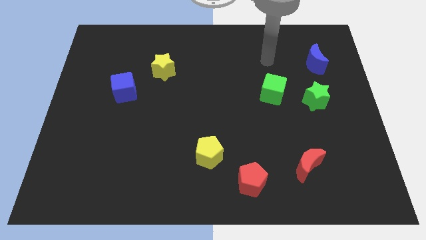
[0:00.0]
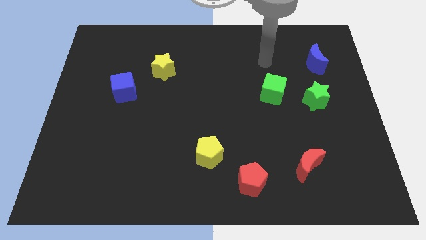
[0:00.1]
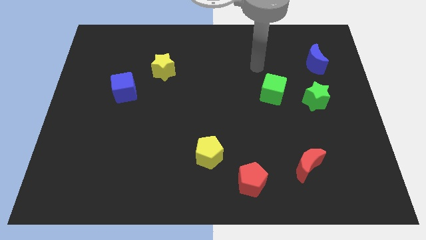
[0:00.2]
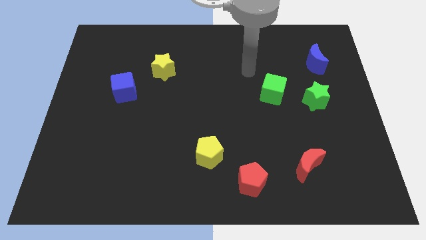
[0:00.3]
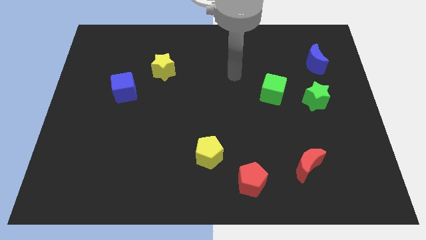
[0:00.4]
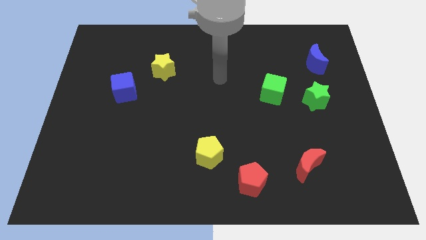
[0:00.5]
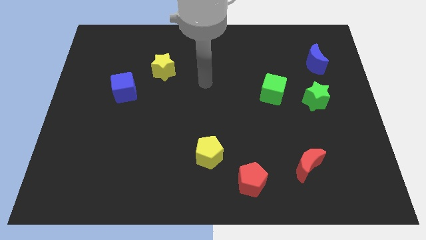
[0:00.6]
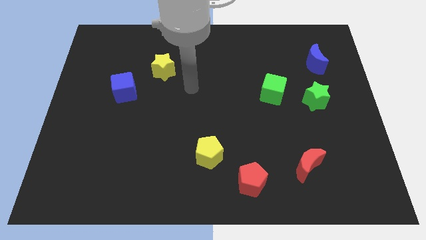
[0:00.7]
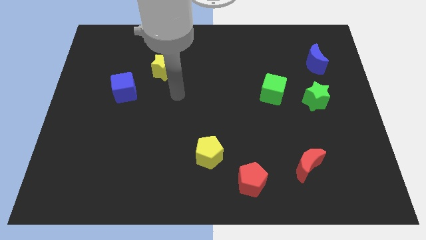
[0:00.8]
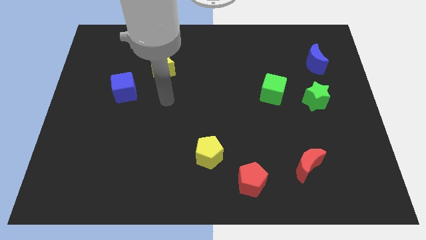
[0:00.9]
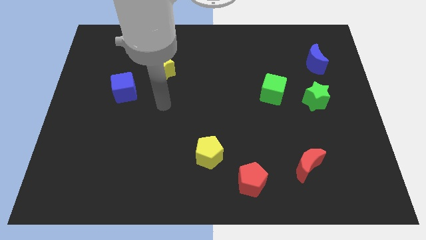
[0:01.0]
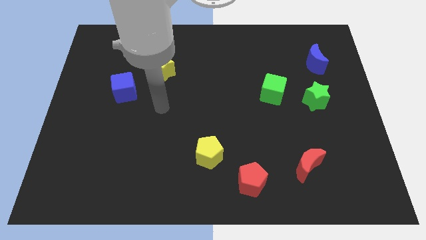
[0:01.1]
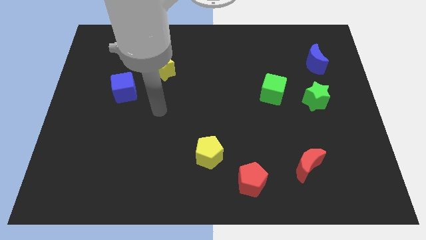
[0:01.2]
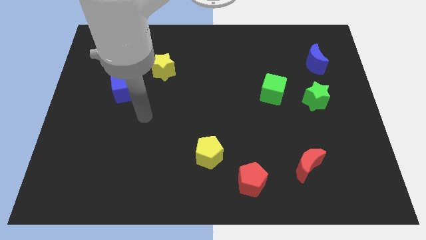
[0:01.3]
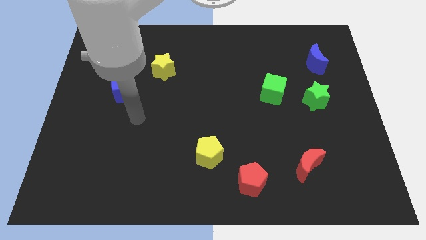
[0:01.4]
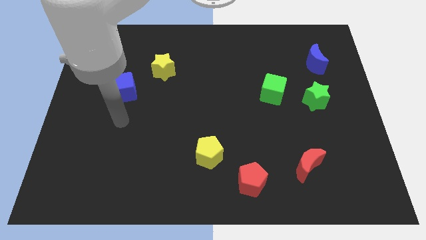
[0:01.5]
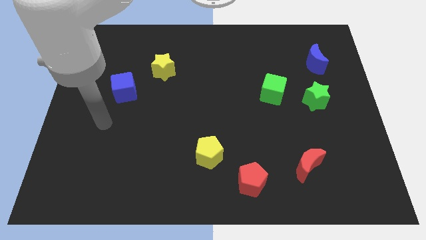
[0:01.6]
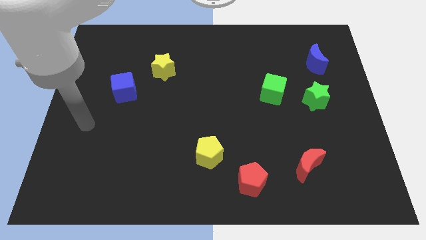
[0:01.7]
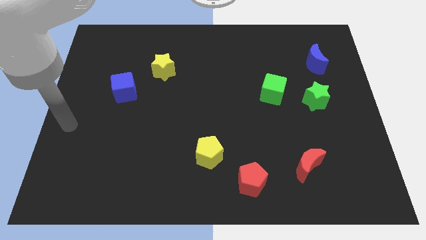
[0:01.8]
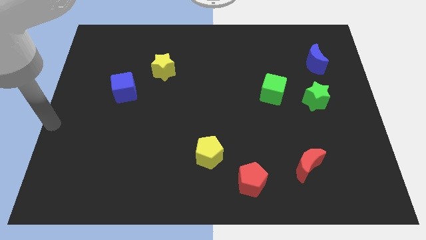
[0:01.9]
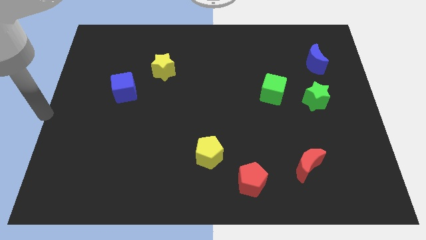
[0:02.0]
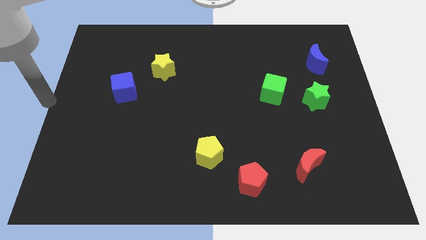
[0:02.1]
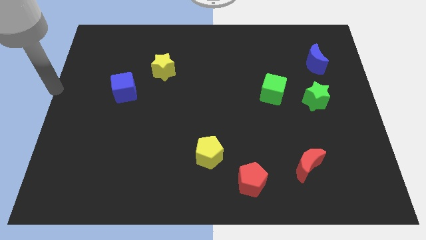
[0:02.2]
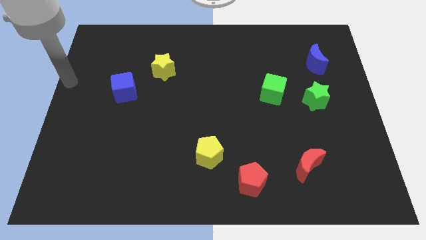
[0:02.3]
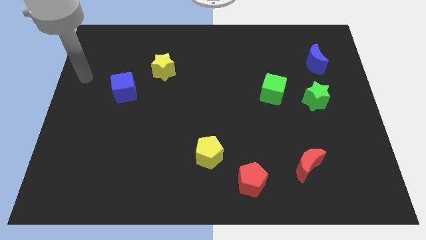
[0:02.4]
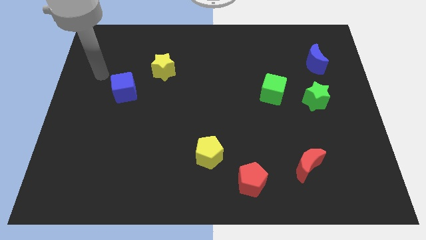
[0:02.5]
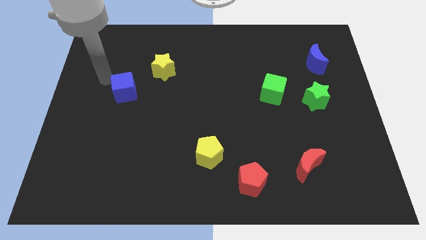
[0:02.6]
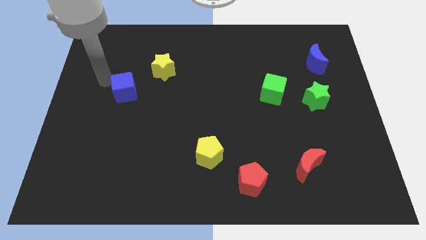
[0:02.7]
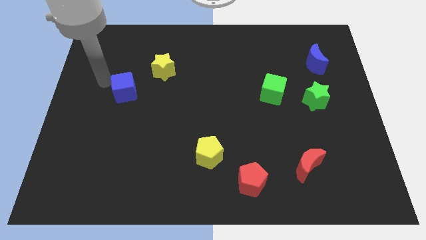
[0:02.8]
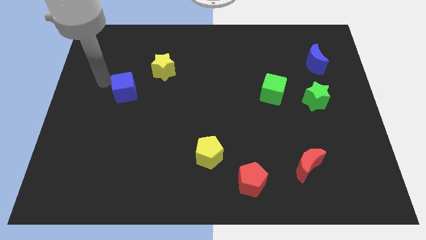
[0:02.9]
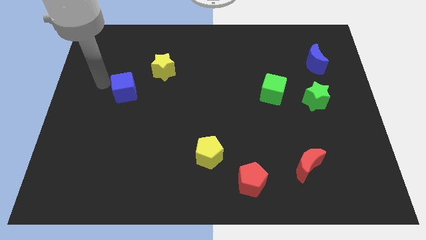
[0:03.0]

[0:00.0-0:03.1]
move your arm to the left of blue cube

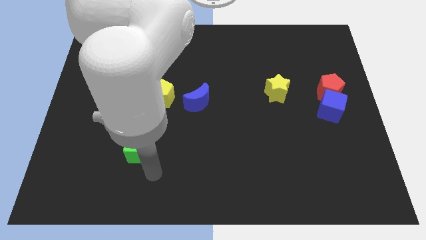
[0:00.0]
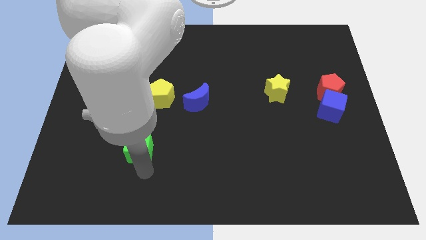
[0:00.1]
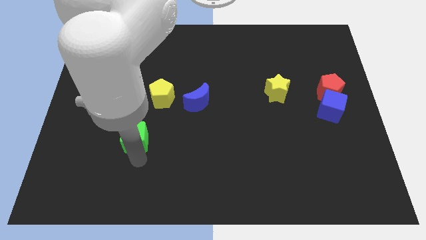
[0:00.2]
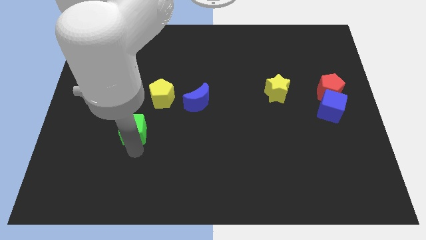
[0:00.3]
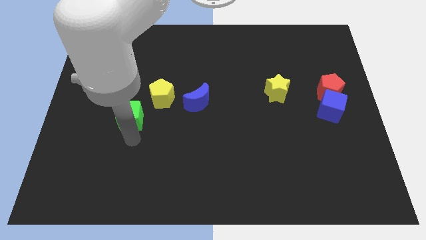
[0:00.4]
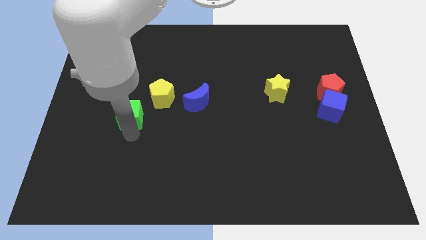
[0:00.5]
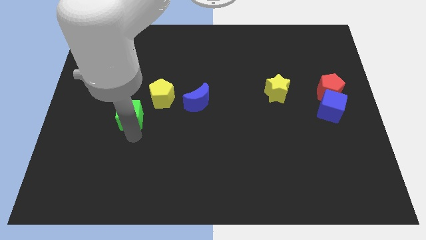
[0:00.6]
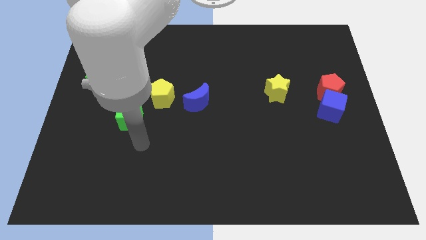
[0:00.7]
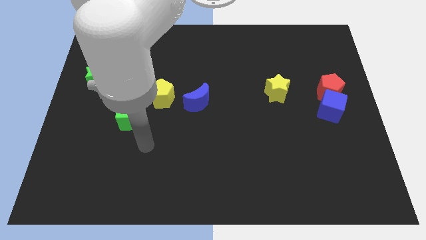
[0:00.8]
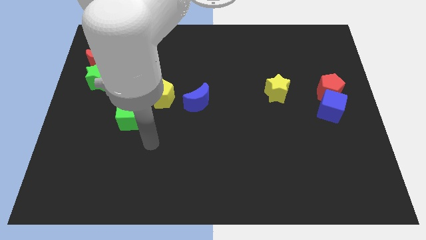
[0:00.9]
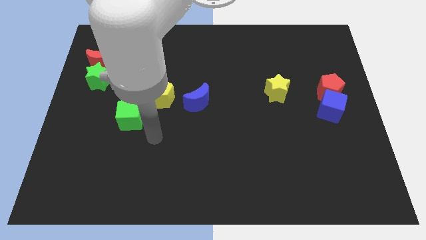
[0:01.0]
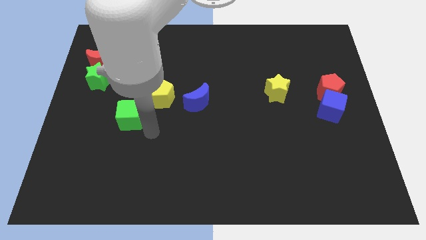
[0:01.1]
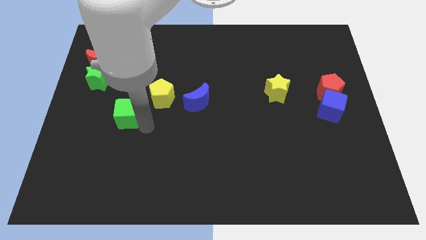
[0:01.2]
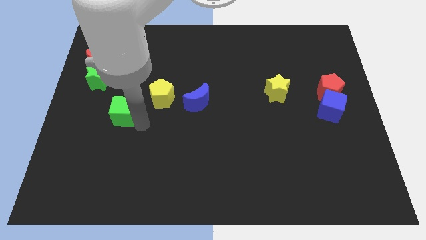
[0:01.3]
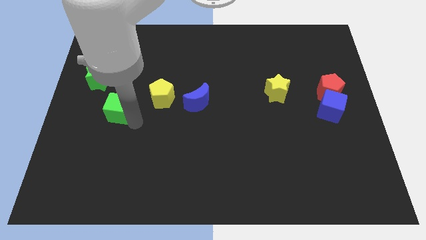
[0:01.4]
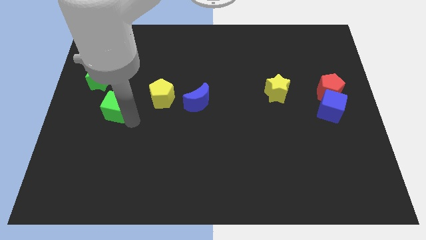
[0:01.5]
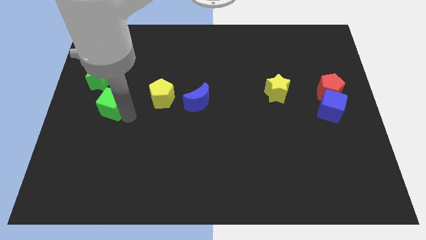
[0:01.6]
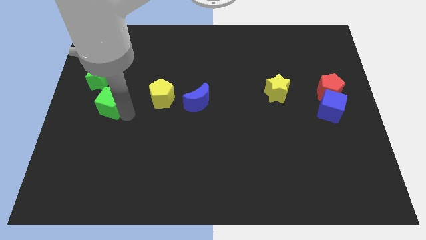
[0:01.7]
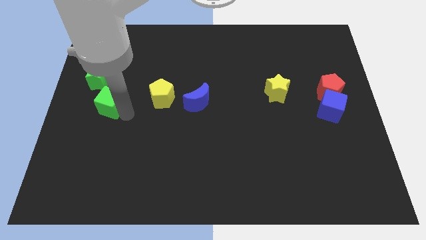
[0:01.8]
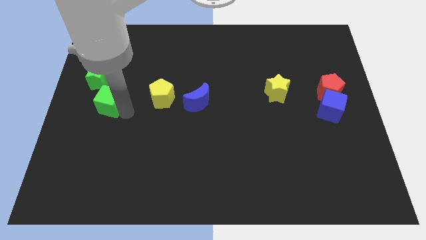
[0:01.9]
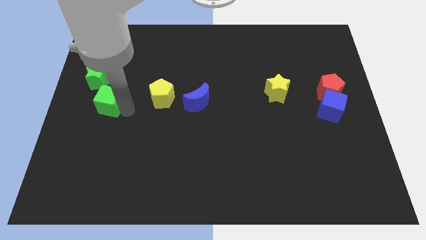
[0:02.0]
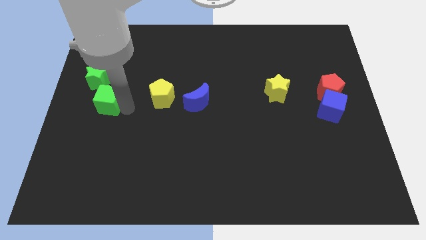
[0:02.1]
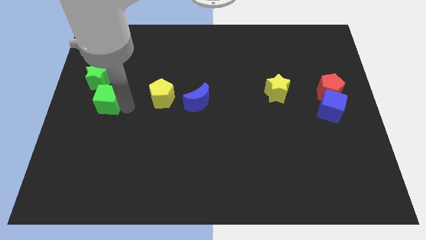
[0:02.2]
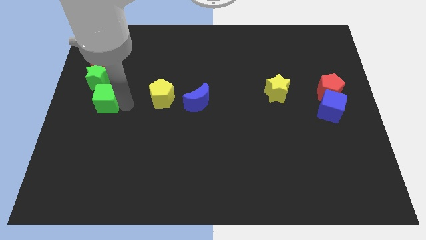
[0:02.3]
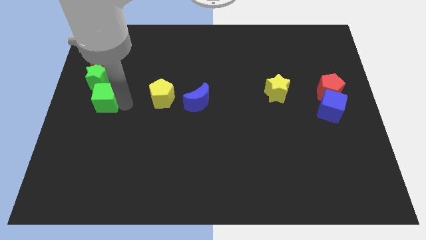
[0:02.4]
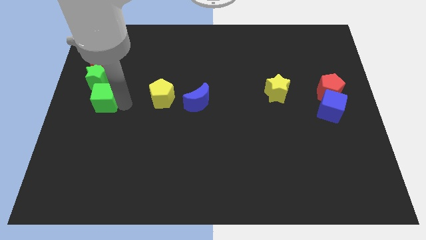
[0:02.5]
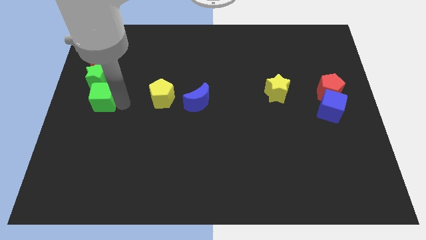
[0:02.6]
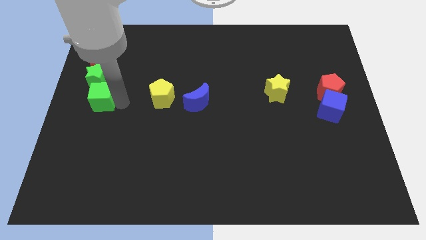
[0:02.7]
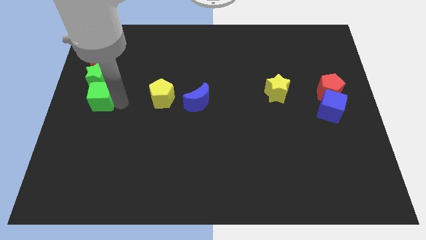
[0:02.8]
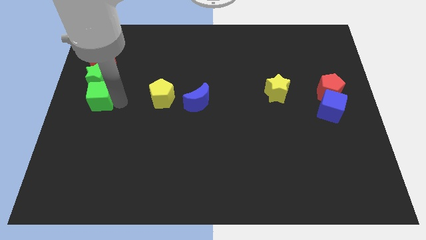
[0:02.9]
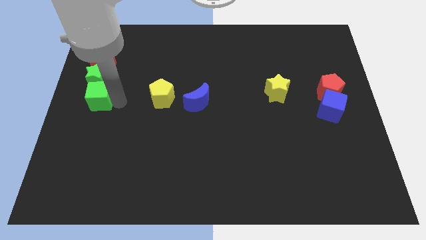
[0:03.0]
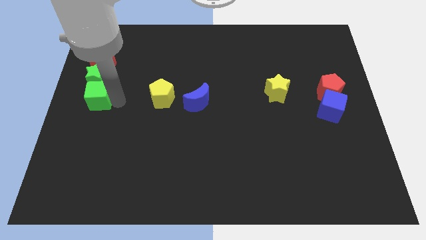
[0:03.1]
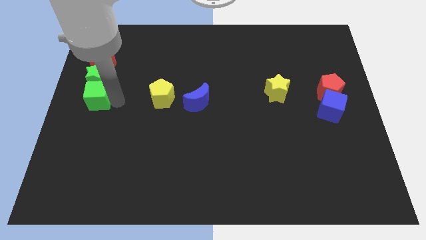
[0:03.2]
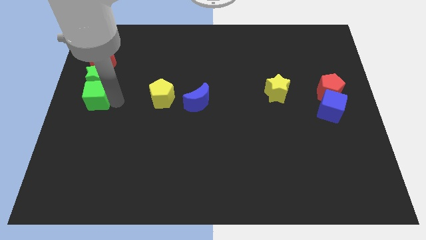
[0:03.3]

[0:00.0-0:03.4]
place green cube below green star

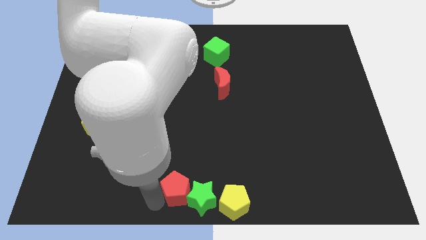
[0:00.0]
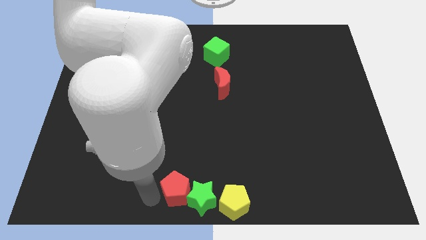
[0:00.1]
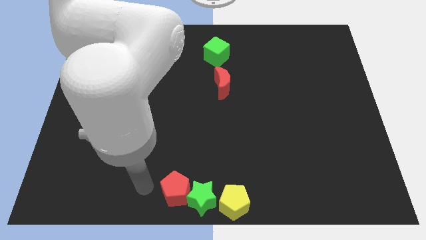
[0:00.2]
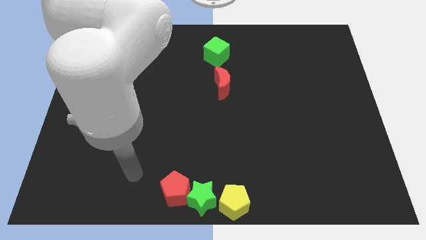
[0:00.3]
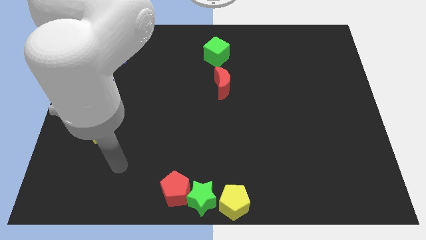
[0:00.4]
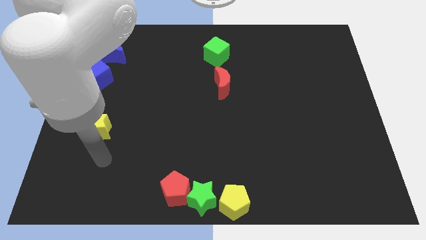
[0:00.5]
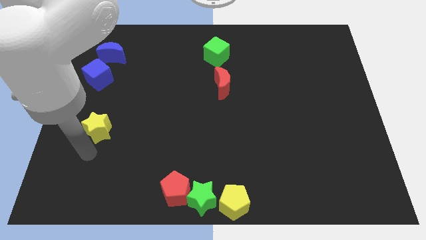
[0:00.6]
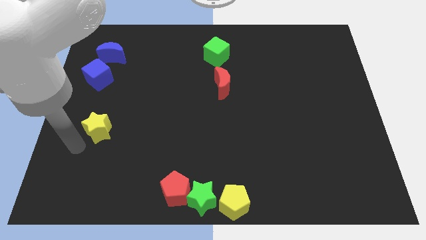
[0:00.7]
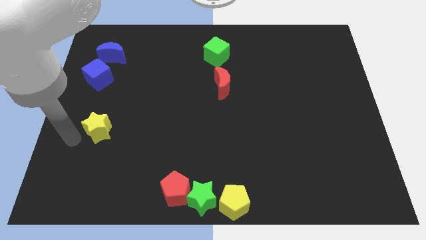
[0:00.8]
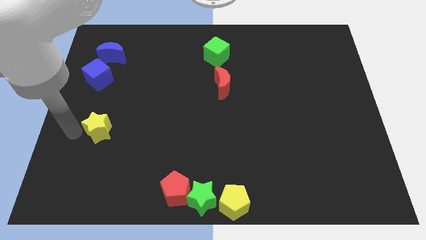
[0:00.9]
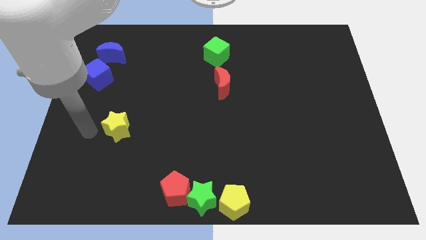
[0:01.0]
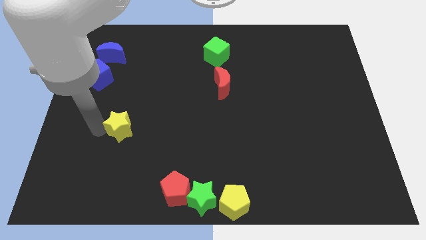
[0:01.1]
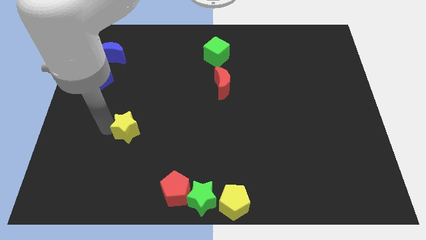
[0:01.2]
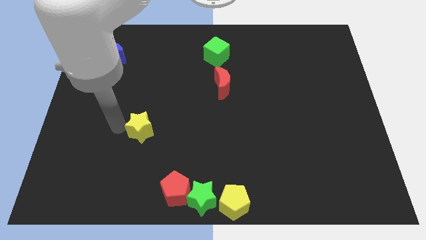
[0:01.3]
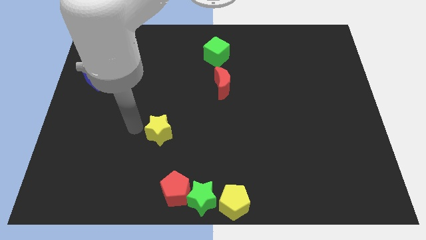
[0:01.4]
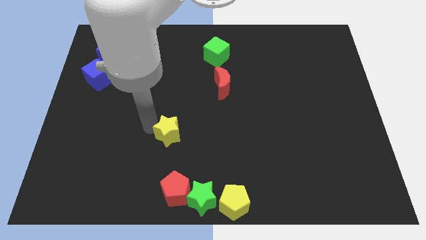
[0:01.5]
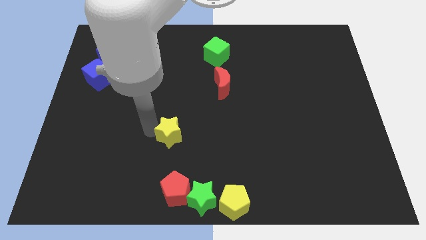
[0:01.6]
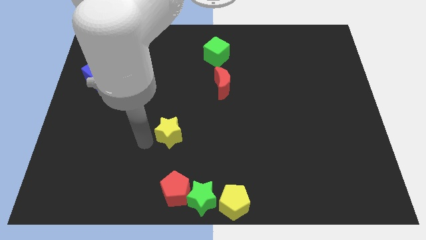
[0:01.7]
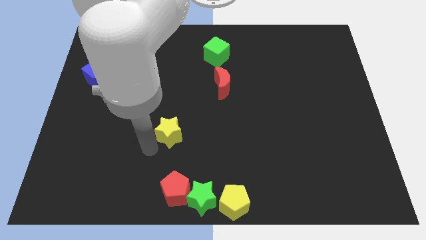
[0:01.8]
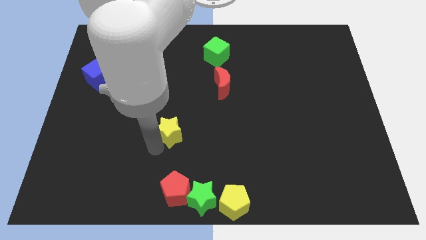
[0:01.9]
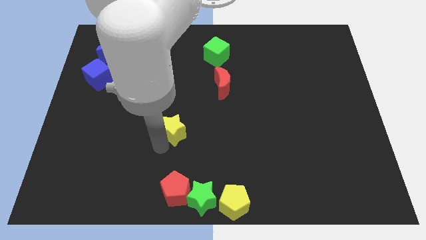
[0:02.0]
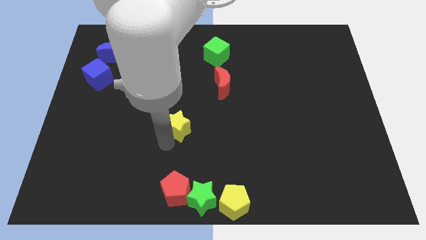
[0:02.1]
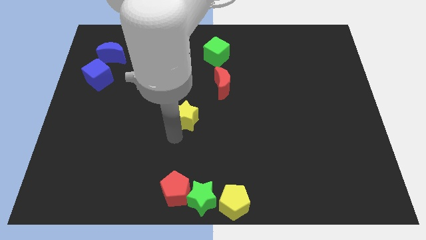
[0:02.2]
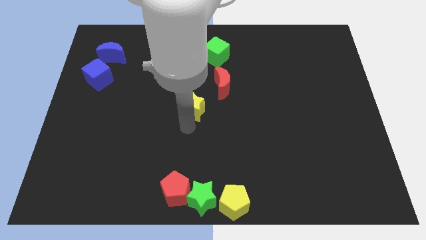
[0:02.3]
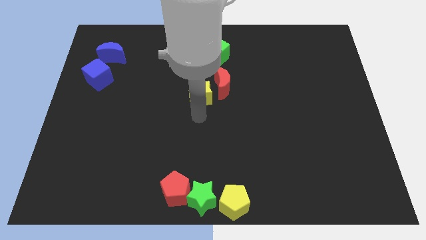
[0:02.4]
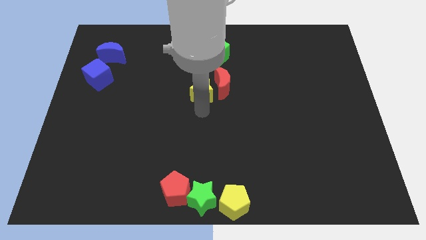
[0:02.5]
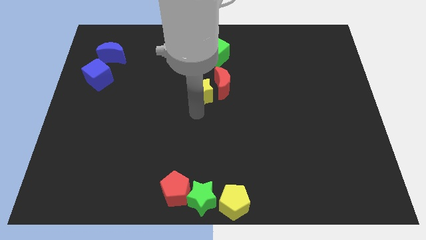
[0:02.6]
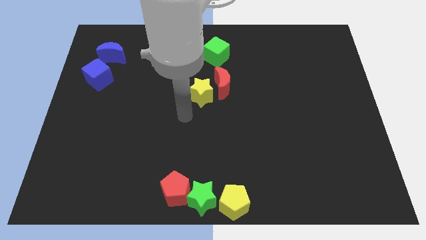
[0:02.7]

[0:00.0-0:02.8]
move your arm away from the red pentagon
